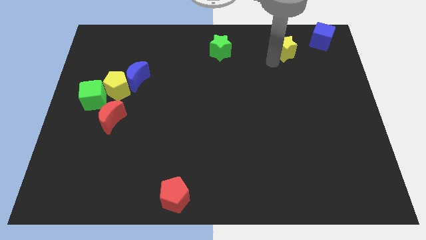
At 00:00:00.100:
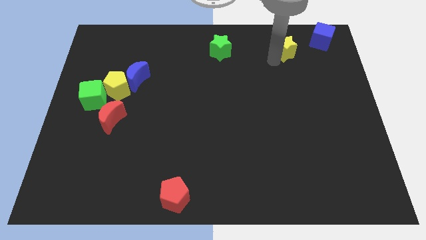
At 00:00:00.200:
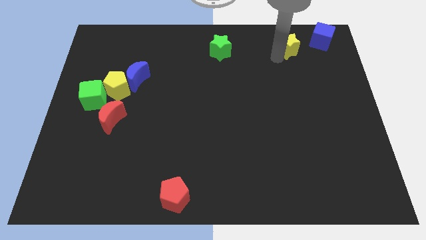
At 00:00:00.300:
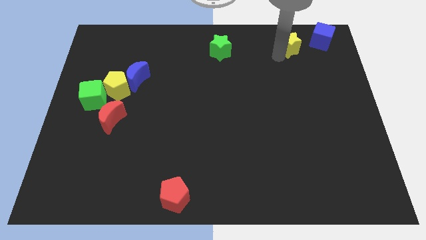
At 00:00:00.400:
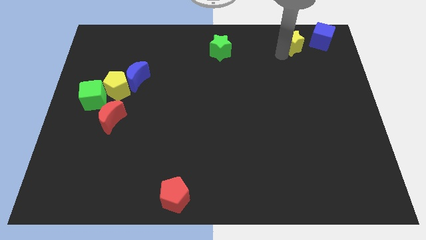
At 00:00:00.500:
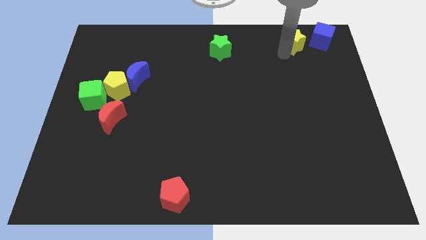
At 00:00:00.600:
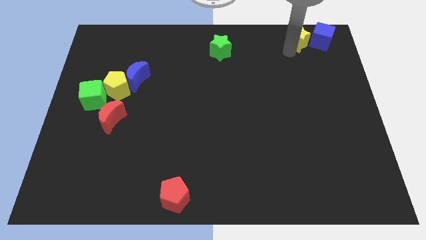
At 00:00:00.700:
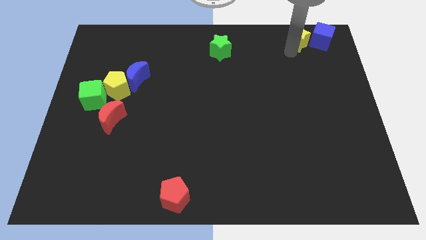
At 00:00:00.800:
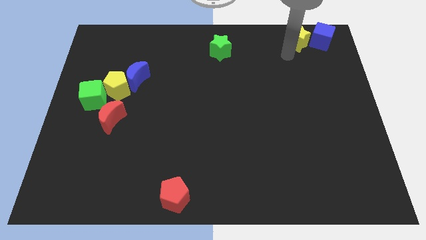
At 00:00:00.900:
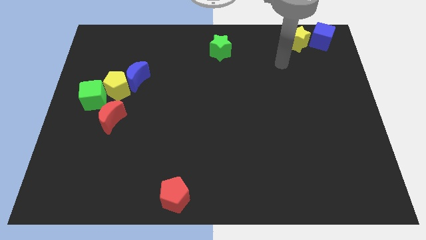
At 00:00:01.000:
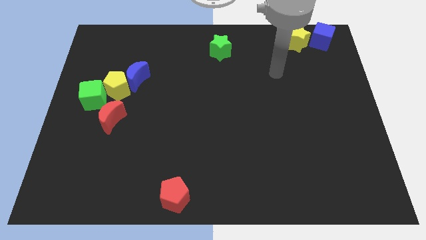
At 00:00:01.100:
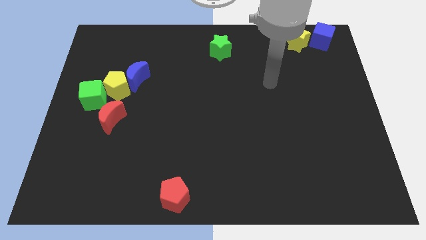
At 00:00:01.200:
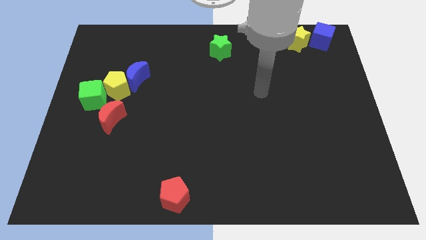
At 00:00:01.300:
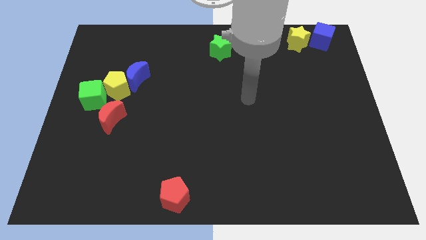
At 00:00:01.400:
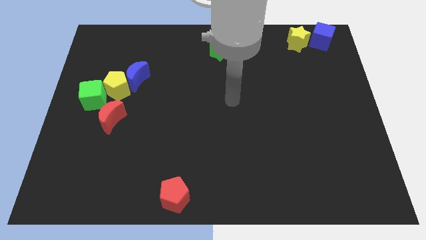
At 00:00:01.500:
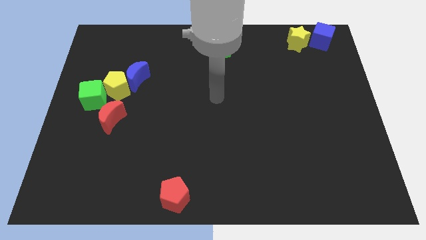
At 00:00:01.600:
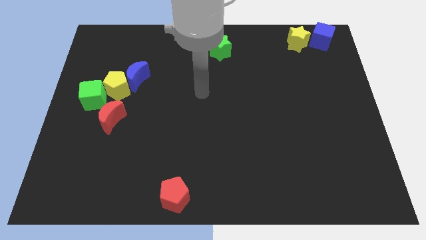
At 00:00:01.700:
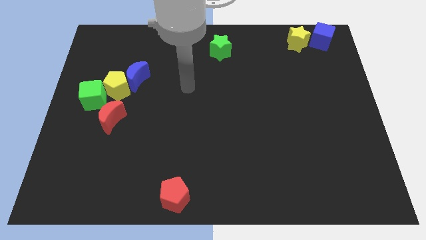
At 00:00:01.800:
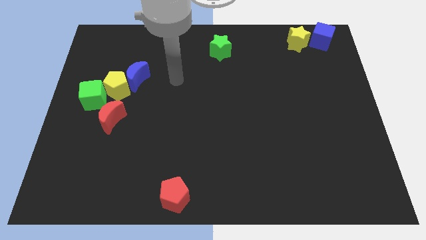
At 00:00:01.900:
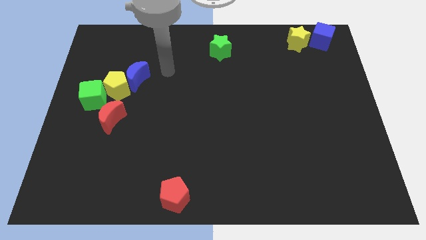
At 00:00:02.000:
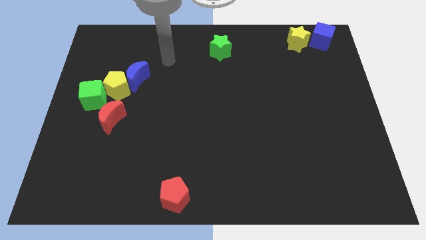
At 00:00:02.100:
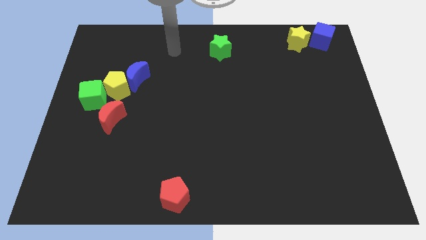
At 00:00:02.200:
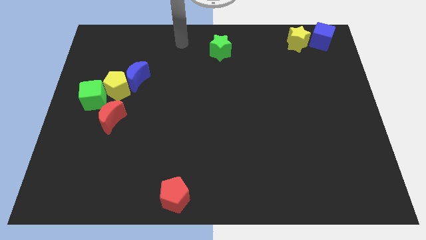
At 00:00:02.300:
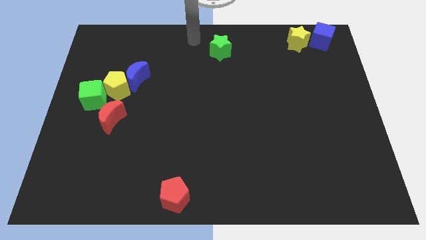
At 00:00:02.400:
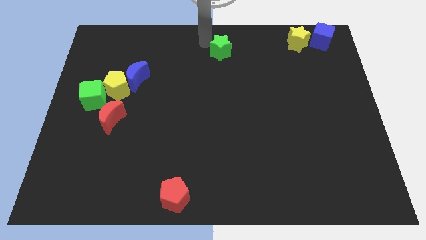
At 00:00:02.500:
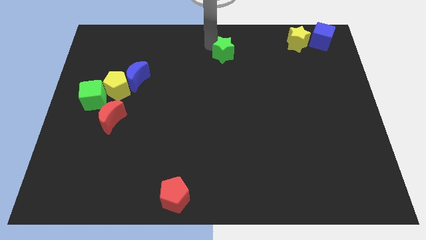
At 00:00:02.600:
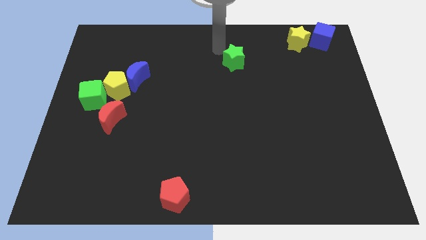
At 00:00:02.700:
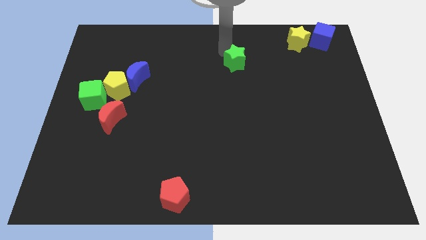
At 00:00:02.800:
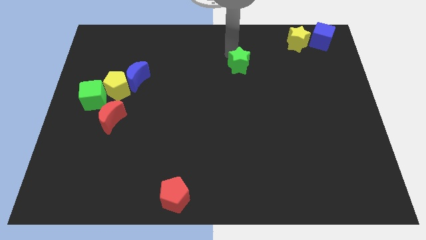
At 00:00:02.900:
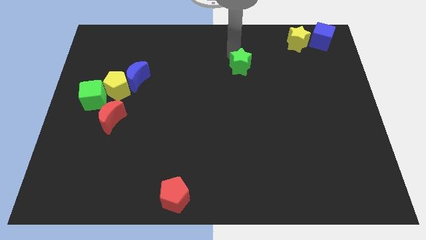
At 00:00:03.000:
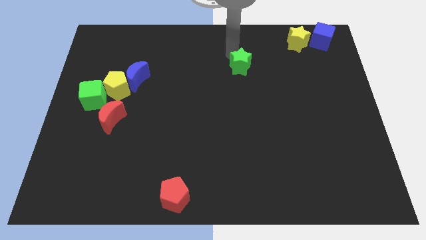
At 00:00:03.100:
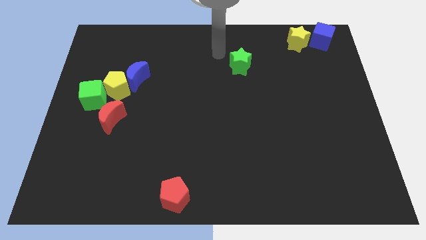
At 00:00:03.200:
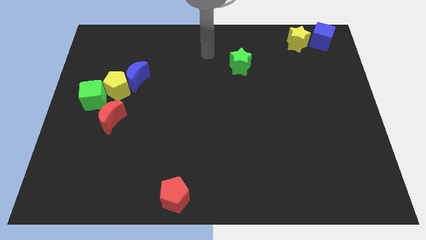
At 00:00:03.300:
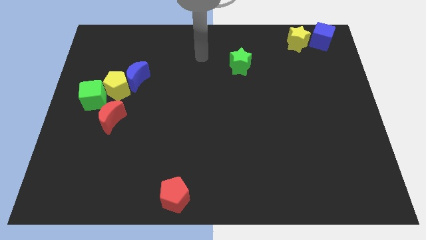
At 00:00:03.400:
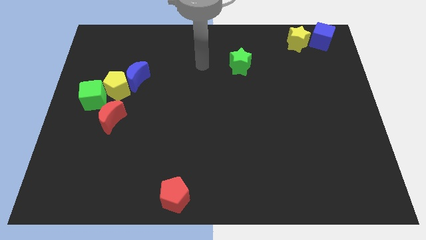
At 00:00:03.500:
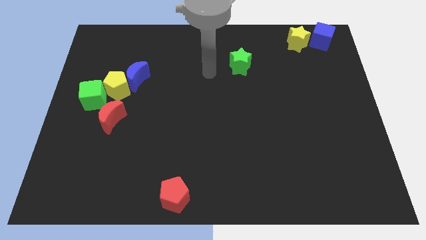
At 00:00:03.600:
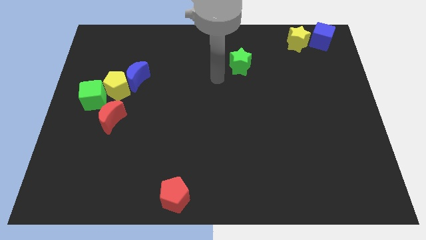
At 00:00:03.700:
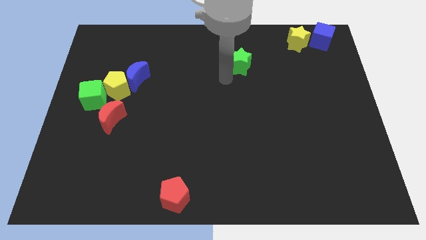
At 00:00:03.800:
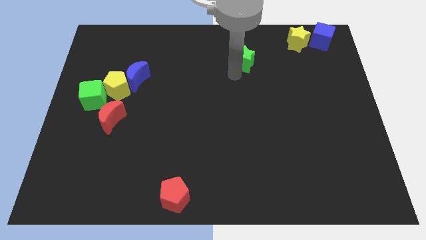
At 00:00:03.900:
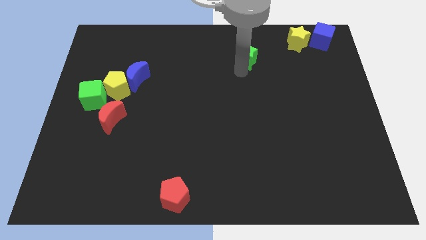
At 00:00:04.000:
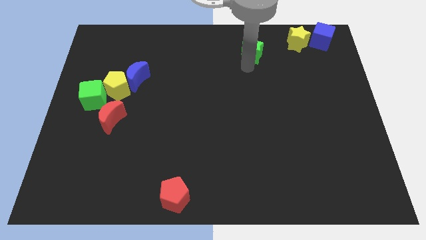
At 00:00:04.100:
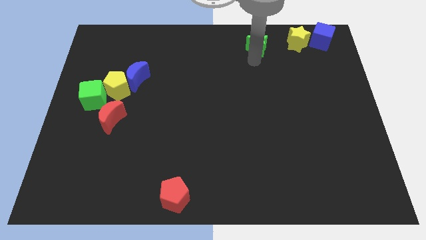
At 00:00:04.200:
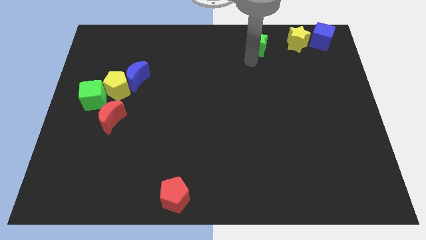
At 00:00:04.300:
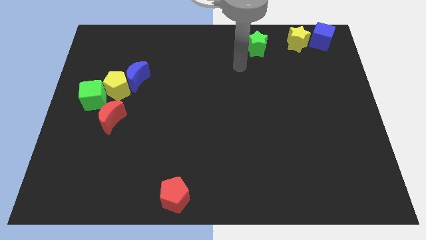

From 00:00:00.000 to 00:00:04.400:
move the yellow star to the left of the blue cube

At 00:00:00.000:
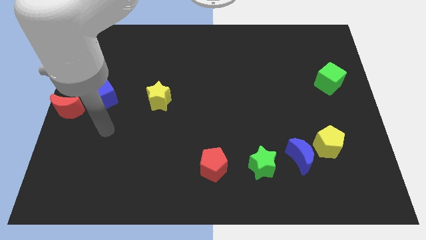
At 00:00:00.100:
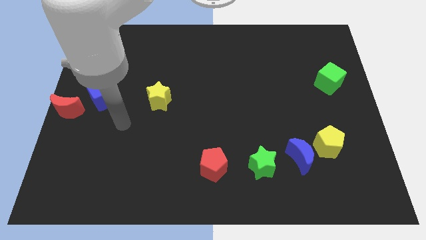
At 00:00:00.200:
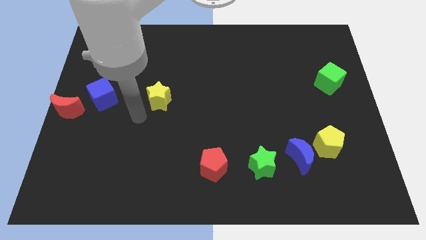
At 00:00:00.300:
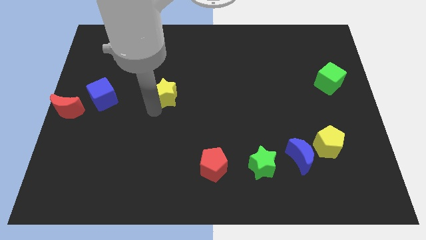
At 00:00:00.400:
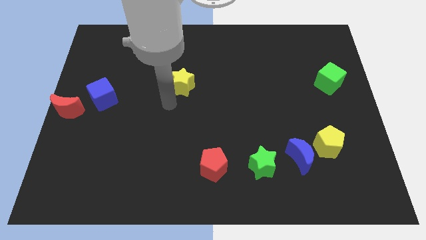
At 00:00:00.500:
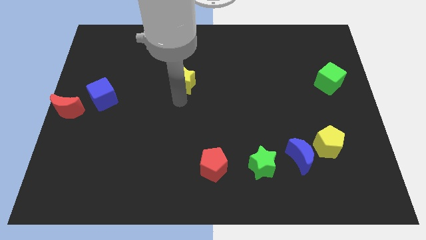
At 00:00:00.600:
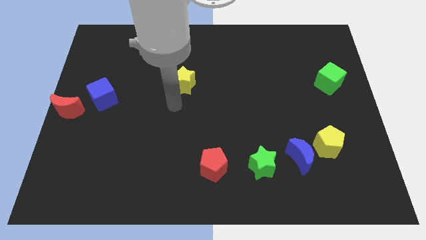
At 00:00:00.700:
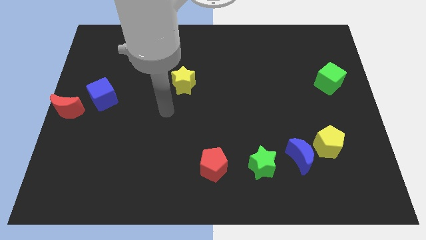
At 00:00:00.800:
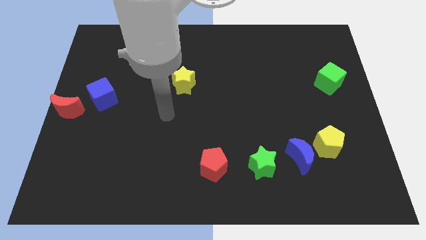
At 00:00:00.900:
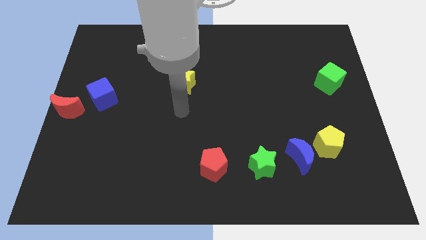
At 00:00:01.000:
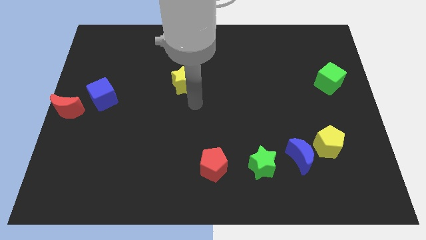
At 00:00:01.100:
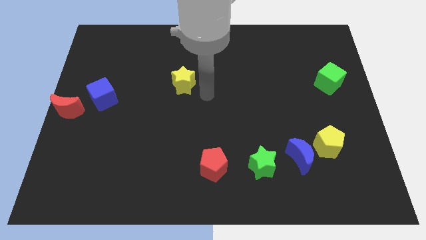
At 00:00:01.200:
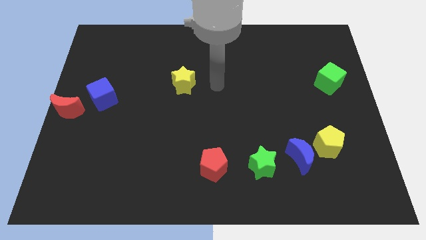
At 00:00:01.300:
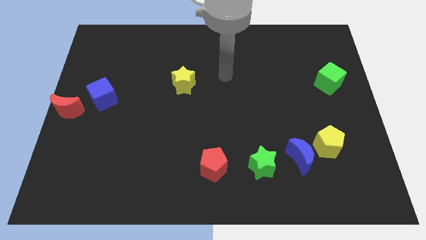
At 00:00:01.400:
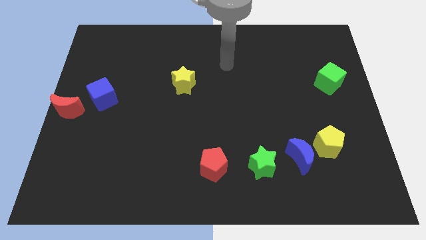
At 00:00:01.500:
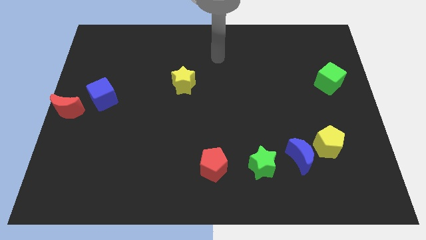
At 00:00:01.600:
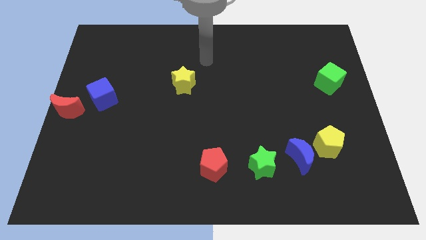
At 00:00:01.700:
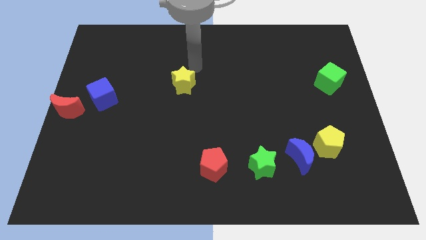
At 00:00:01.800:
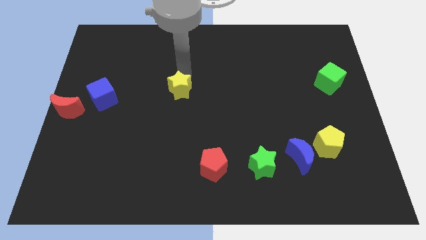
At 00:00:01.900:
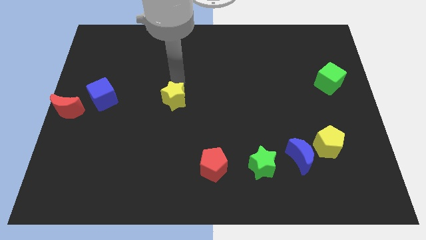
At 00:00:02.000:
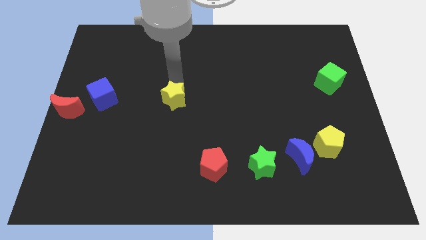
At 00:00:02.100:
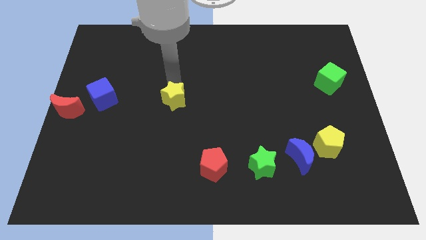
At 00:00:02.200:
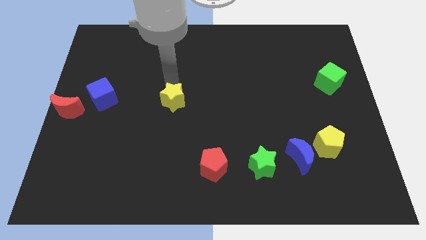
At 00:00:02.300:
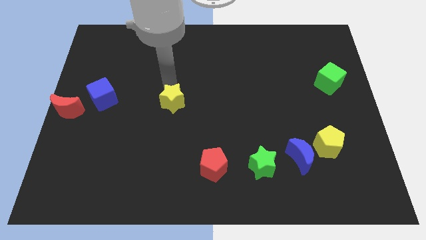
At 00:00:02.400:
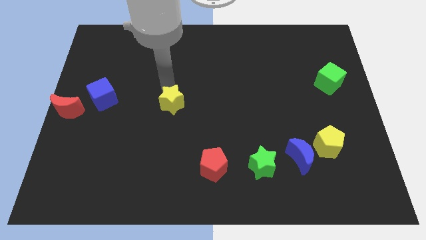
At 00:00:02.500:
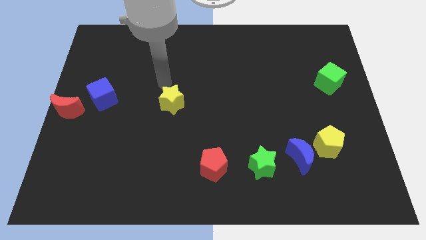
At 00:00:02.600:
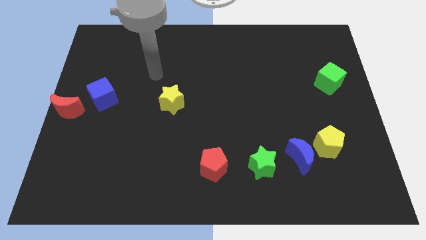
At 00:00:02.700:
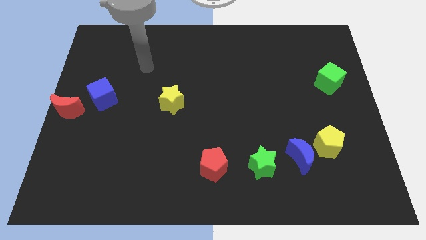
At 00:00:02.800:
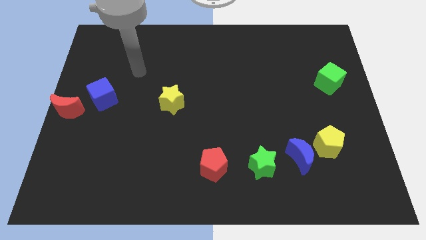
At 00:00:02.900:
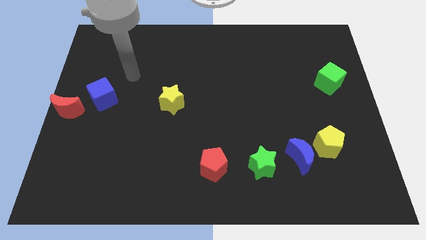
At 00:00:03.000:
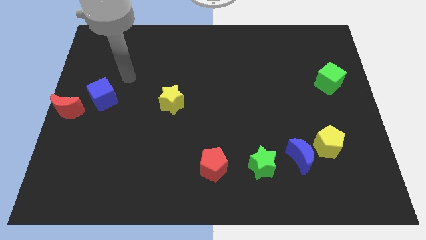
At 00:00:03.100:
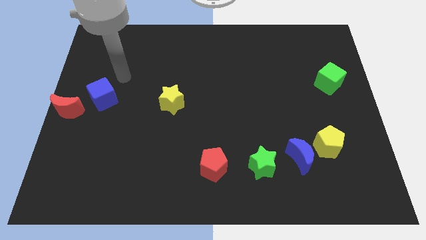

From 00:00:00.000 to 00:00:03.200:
place the yellow star at the top left side of the red pentagon

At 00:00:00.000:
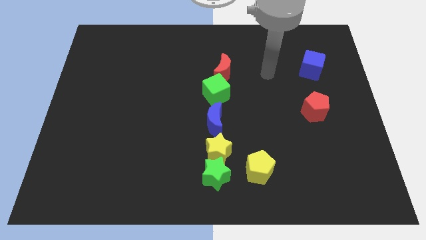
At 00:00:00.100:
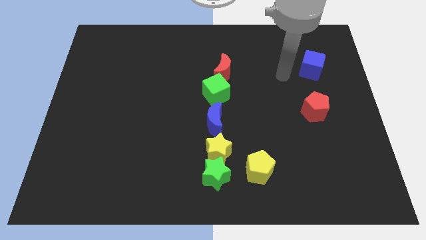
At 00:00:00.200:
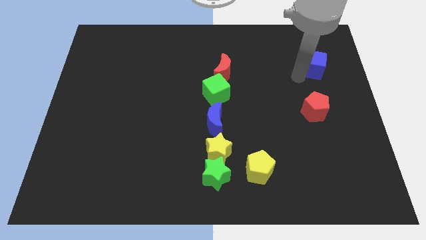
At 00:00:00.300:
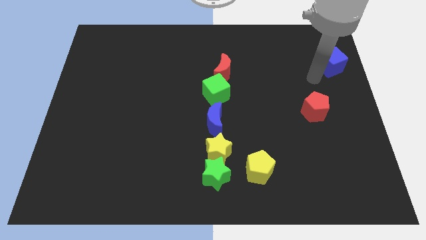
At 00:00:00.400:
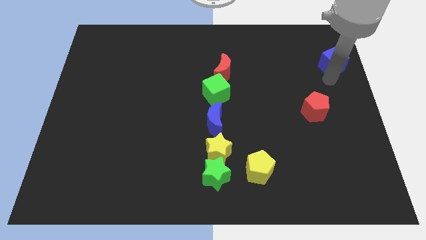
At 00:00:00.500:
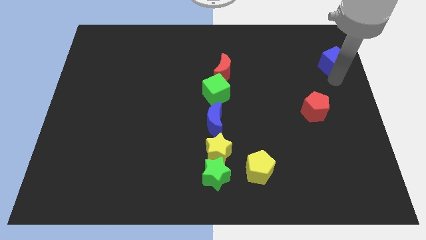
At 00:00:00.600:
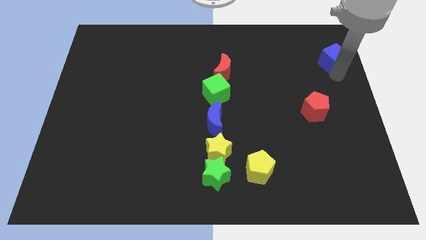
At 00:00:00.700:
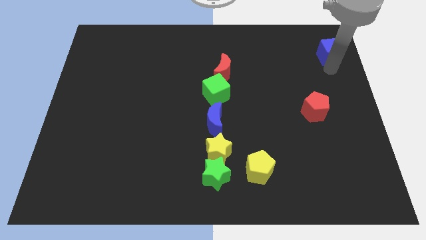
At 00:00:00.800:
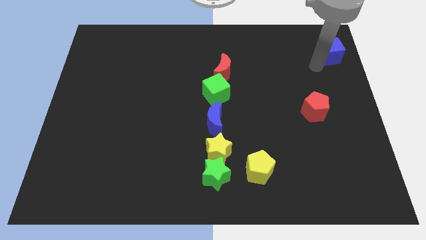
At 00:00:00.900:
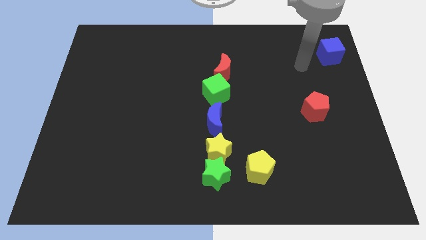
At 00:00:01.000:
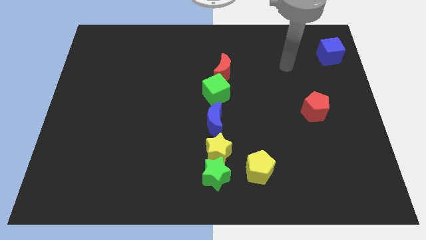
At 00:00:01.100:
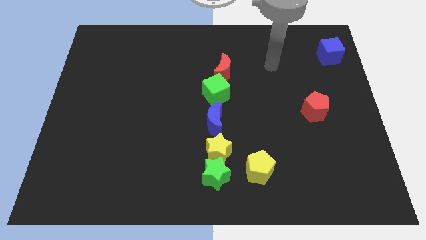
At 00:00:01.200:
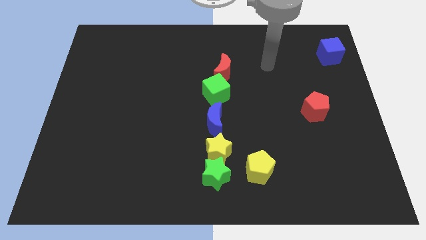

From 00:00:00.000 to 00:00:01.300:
move the blue cube towards top right

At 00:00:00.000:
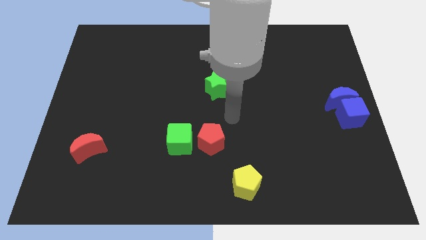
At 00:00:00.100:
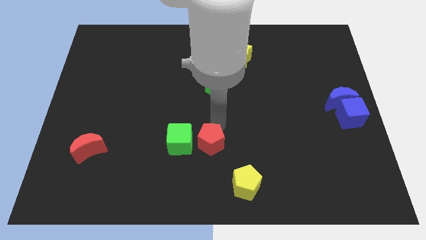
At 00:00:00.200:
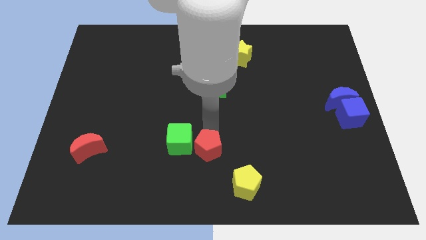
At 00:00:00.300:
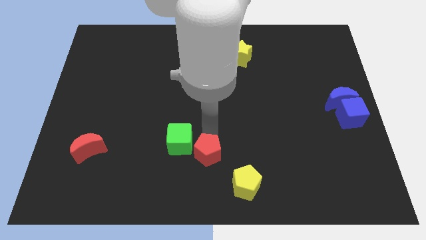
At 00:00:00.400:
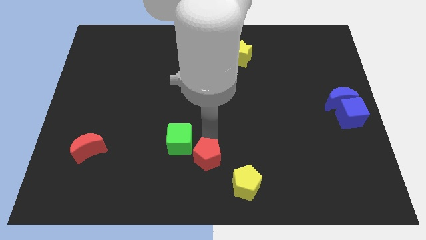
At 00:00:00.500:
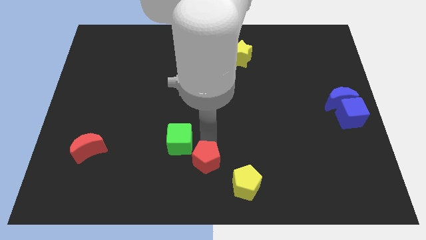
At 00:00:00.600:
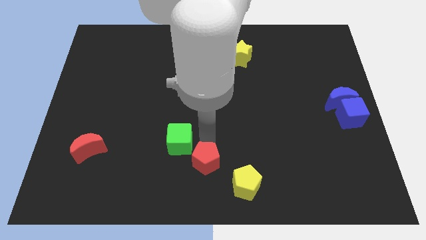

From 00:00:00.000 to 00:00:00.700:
push the red pentagon towards the bottom side
